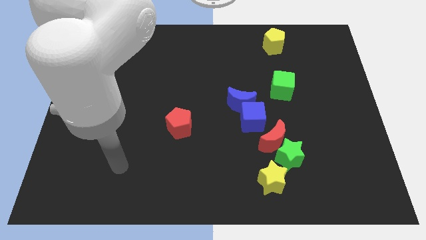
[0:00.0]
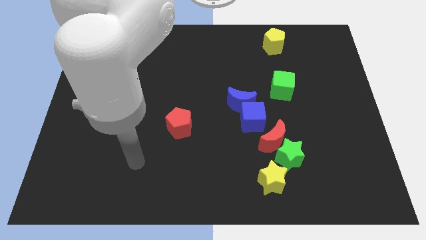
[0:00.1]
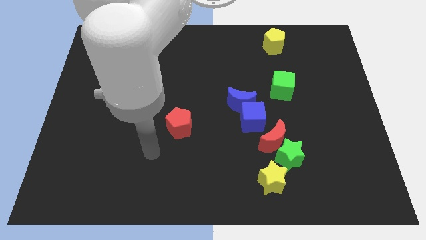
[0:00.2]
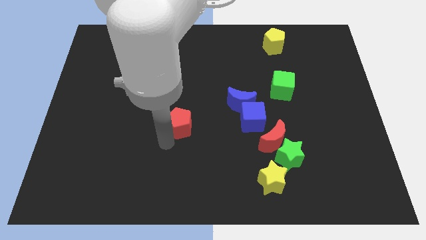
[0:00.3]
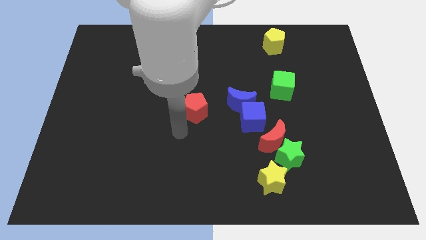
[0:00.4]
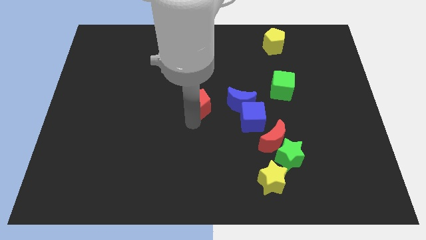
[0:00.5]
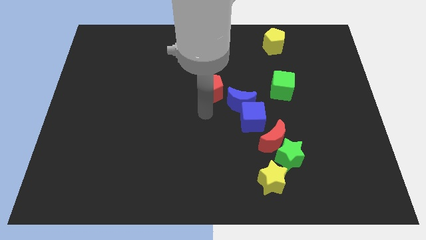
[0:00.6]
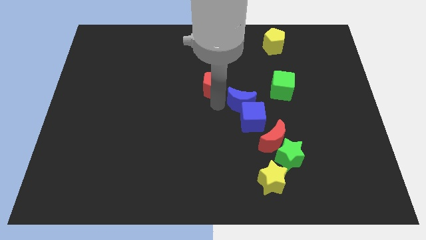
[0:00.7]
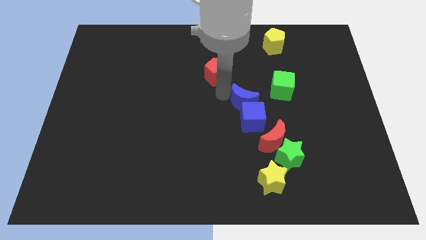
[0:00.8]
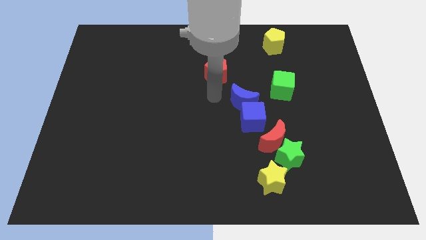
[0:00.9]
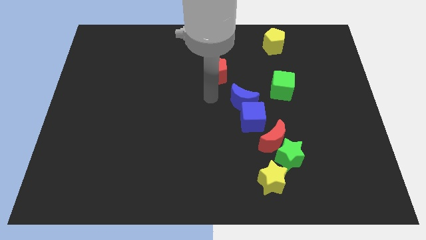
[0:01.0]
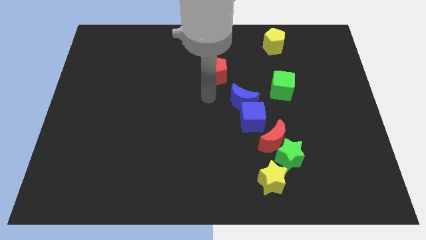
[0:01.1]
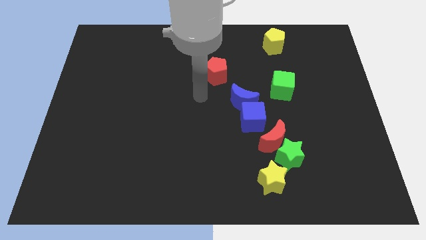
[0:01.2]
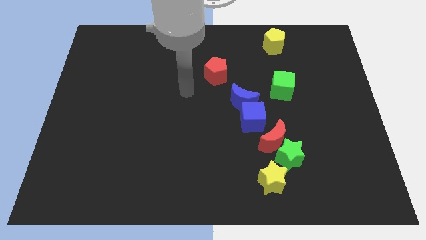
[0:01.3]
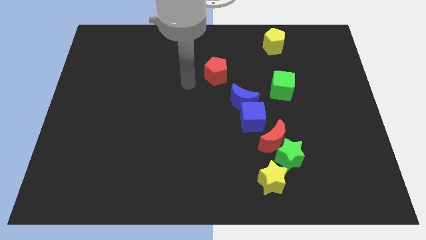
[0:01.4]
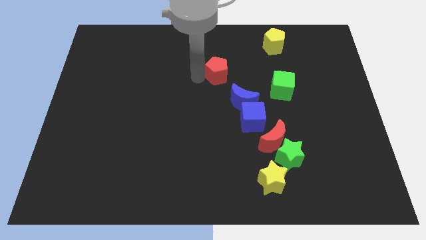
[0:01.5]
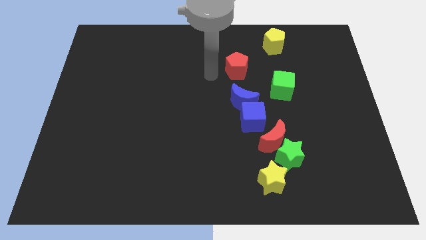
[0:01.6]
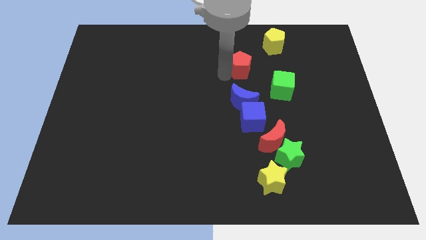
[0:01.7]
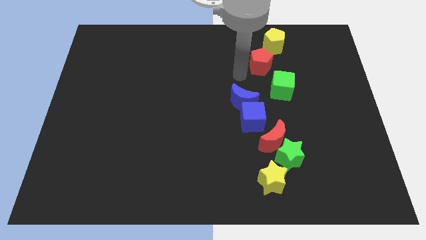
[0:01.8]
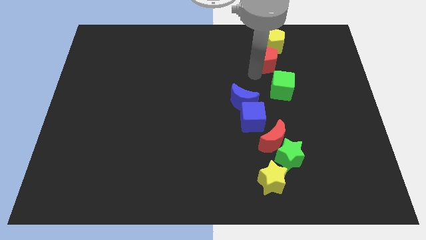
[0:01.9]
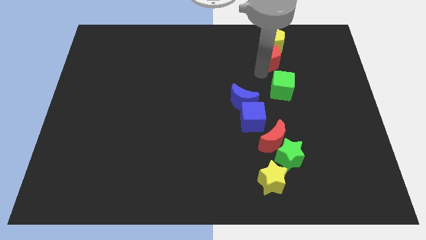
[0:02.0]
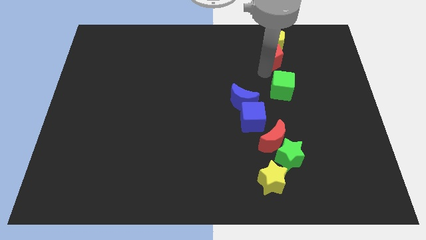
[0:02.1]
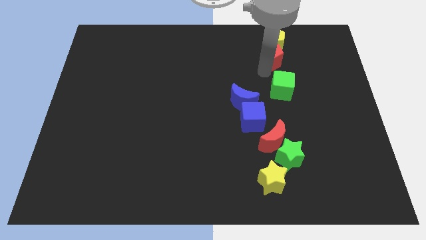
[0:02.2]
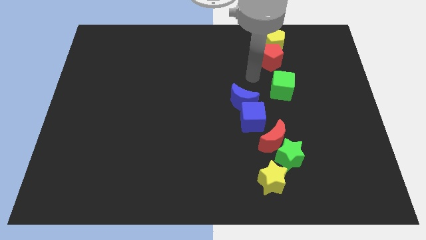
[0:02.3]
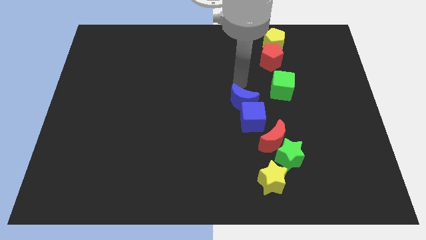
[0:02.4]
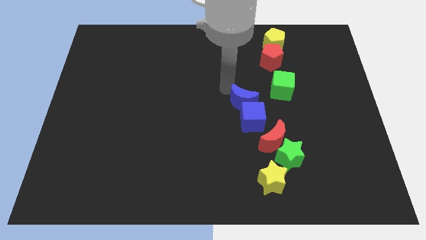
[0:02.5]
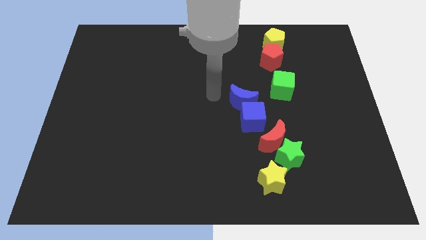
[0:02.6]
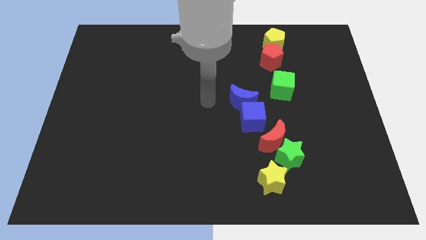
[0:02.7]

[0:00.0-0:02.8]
move the red pentagon to the bottom of the yellow pentagon

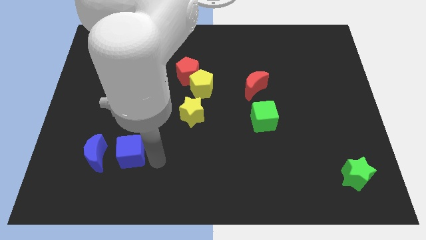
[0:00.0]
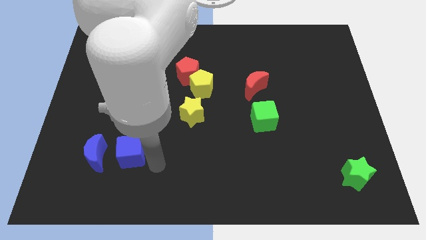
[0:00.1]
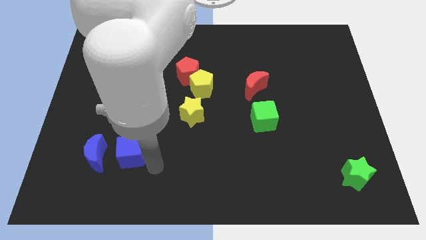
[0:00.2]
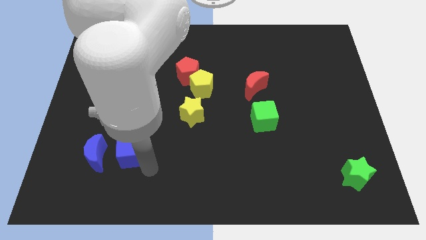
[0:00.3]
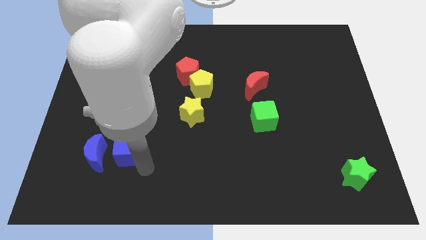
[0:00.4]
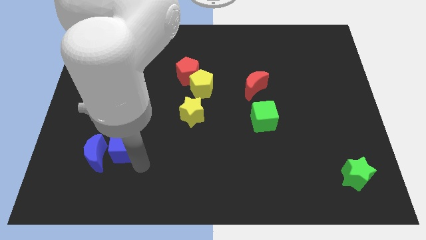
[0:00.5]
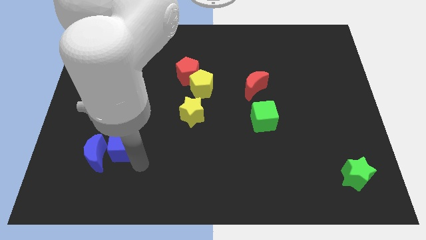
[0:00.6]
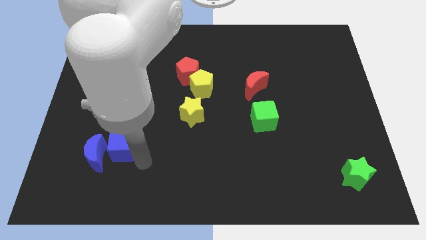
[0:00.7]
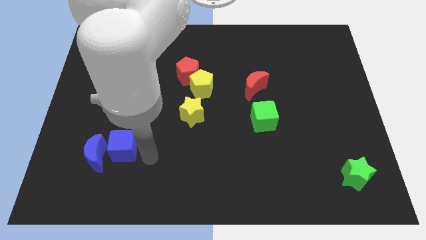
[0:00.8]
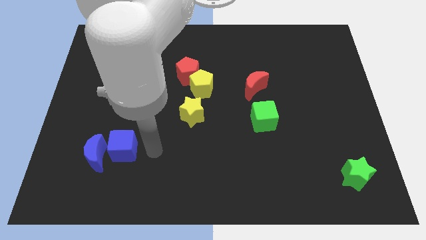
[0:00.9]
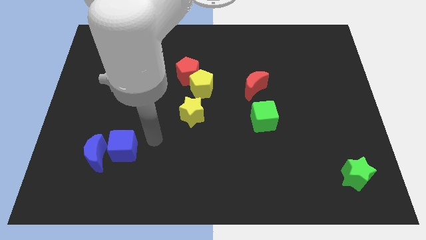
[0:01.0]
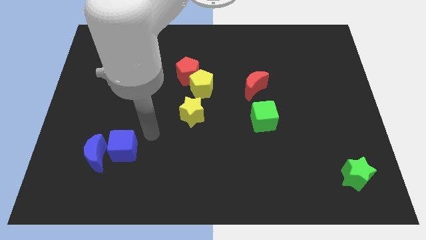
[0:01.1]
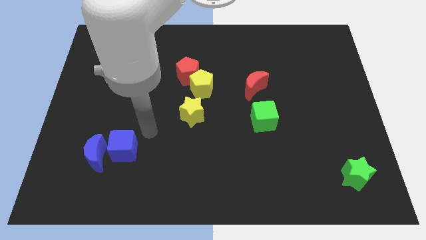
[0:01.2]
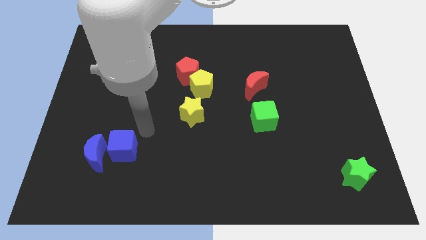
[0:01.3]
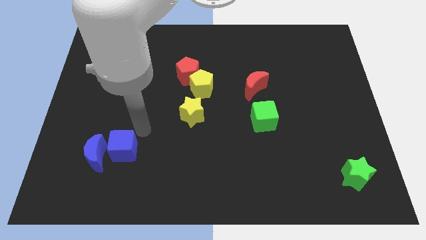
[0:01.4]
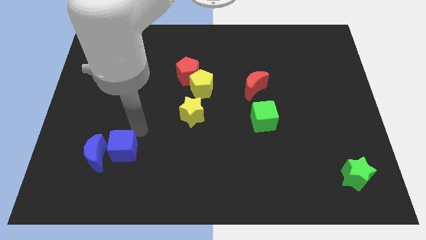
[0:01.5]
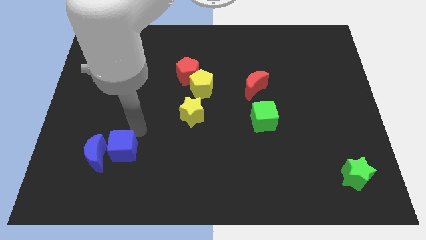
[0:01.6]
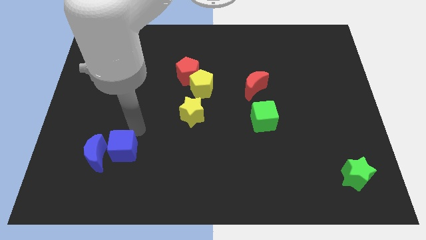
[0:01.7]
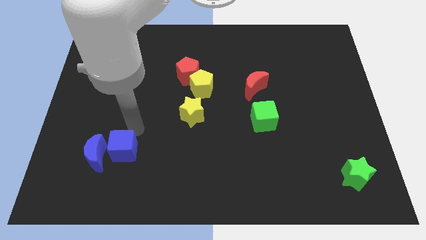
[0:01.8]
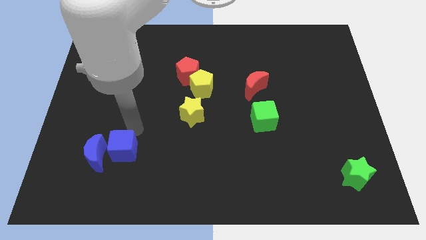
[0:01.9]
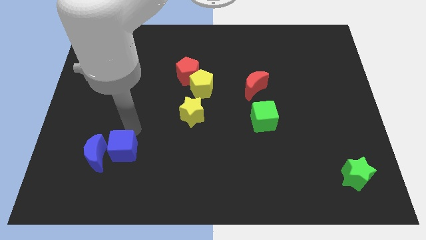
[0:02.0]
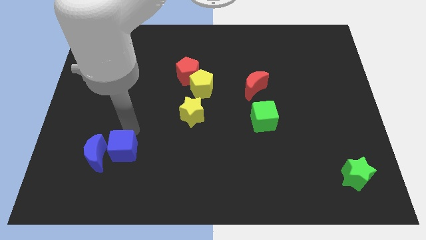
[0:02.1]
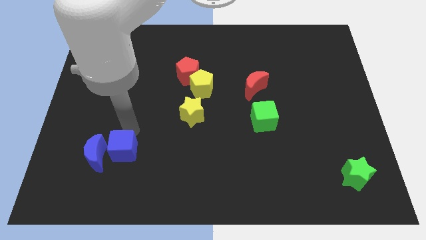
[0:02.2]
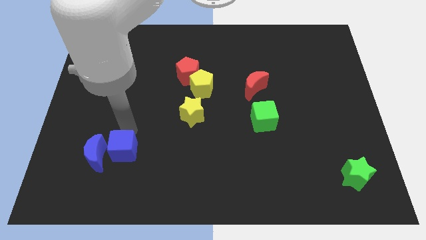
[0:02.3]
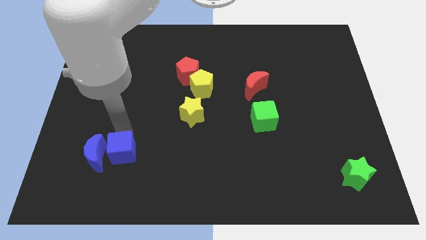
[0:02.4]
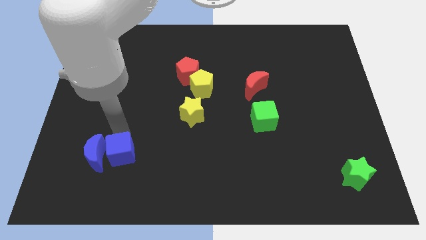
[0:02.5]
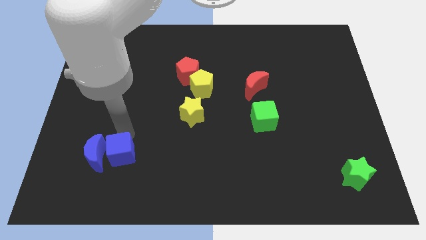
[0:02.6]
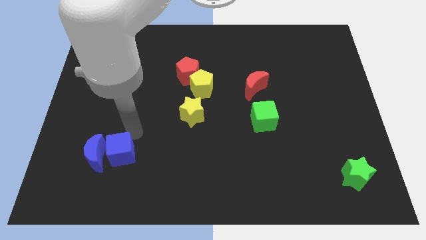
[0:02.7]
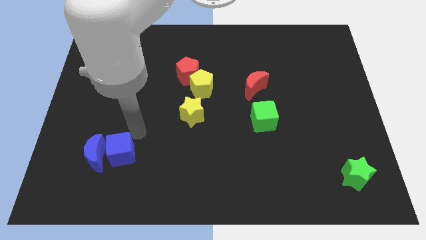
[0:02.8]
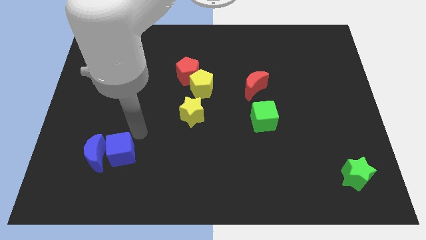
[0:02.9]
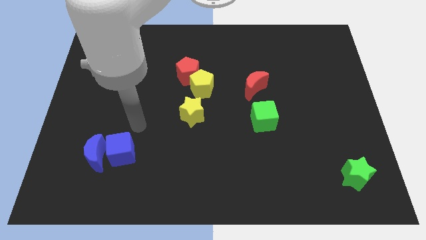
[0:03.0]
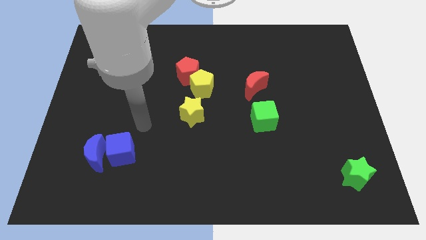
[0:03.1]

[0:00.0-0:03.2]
push the blue cube close to the blue crescent

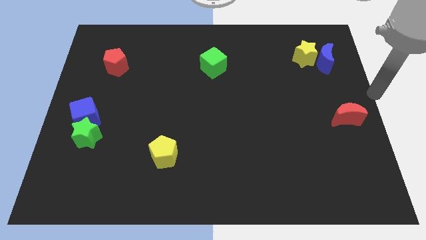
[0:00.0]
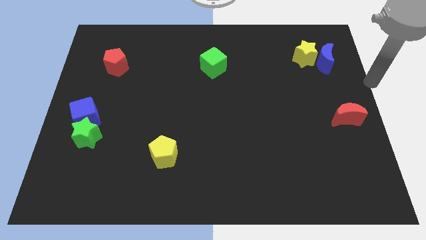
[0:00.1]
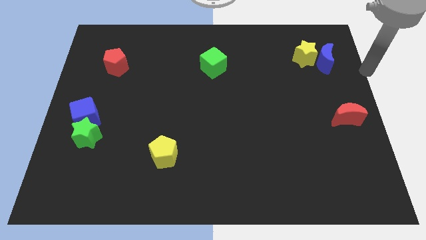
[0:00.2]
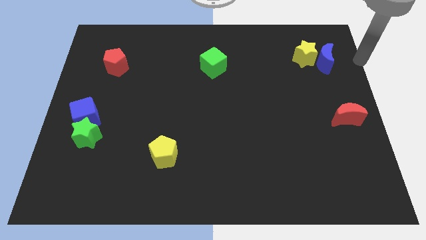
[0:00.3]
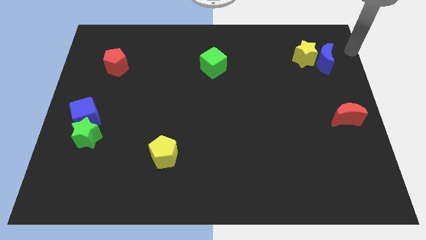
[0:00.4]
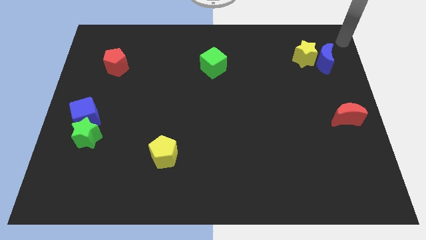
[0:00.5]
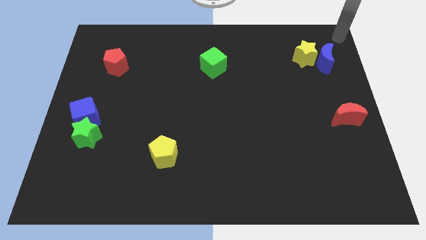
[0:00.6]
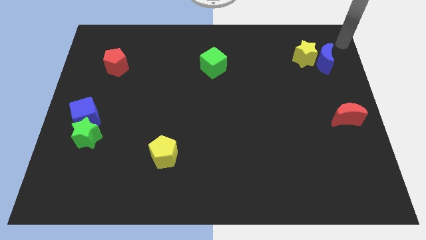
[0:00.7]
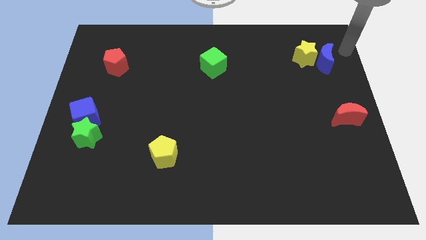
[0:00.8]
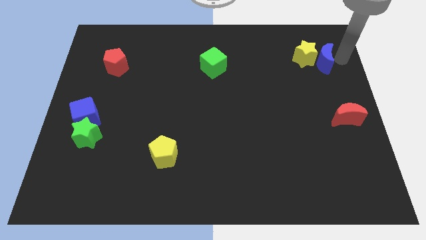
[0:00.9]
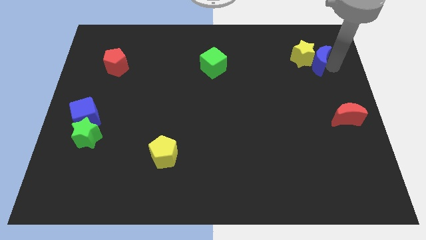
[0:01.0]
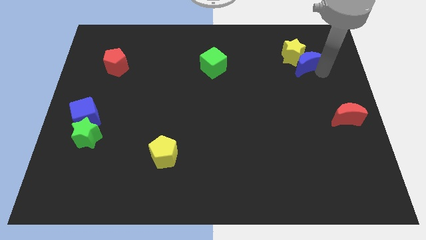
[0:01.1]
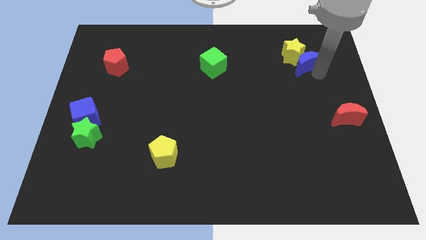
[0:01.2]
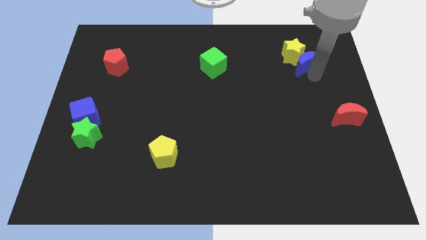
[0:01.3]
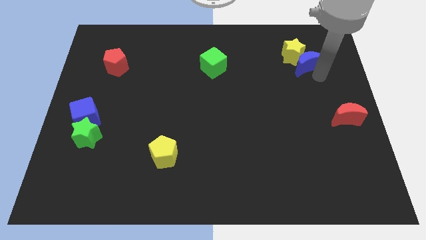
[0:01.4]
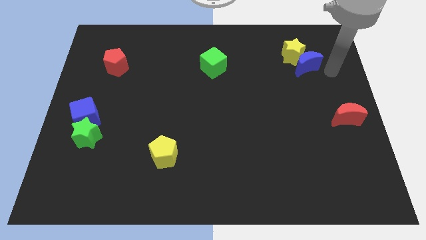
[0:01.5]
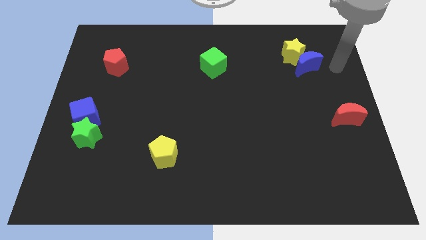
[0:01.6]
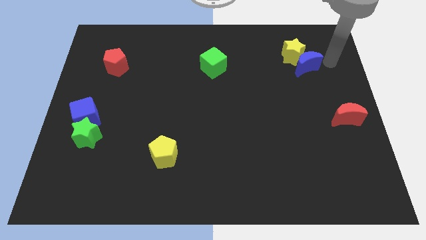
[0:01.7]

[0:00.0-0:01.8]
push the blue moon into the yellow star

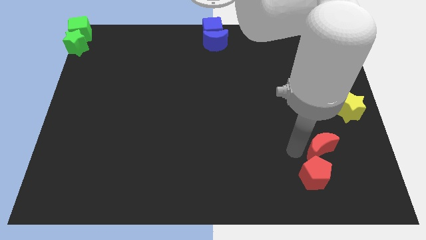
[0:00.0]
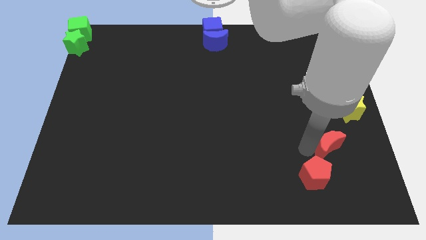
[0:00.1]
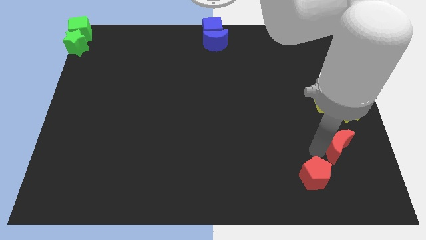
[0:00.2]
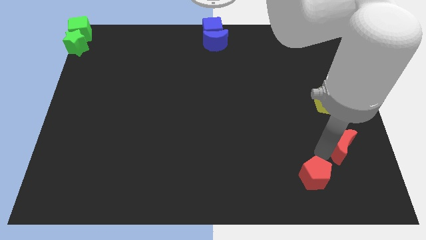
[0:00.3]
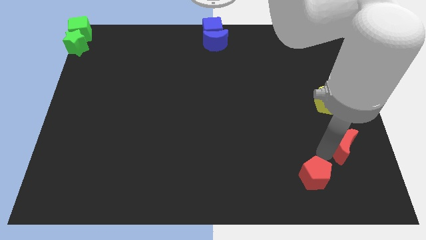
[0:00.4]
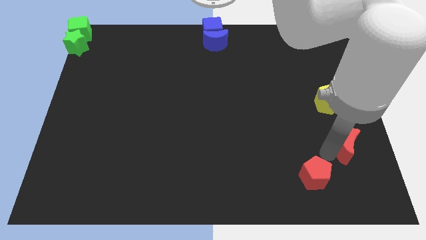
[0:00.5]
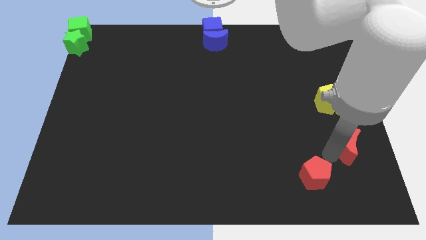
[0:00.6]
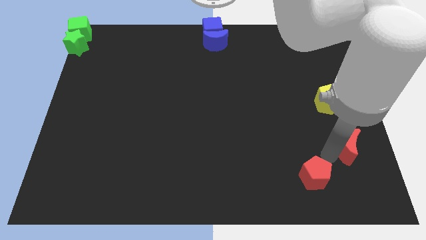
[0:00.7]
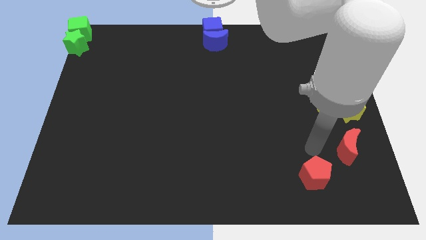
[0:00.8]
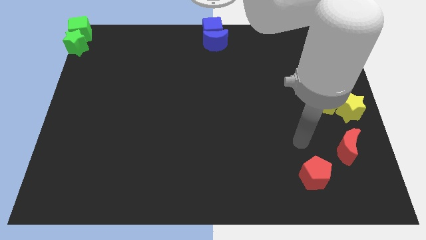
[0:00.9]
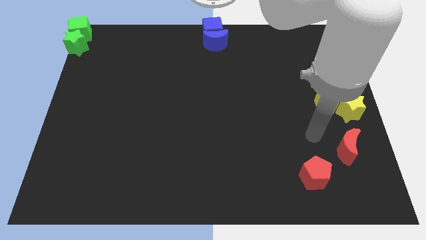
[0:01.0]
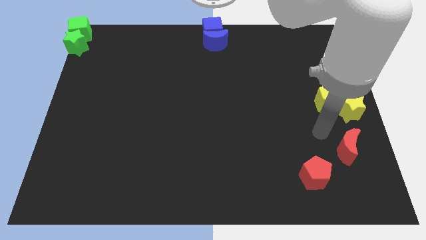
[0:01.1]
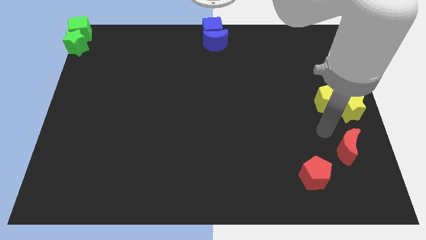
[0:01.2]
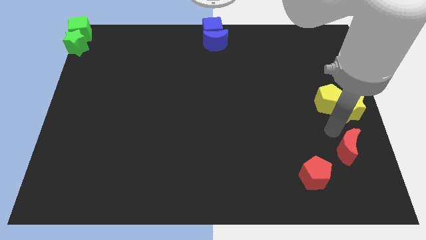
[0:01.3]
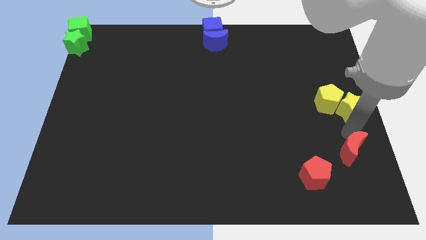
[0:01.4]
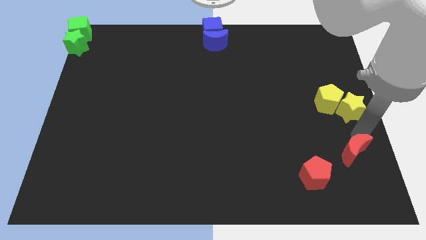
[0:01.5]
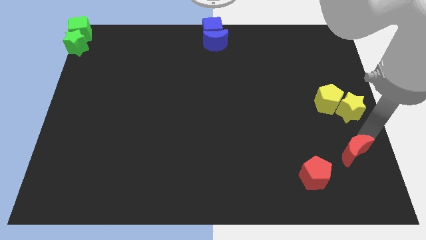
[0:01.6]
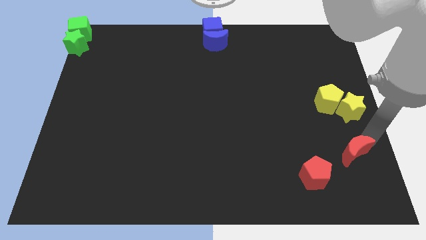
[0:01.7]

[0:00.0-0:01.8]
place the red crescent vertically below the yellow star
